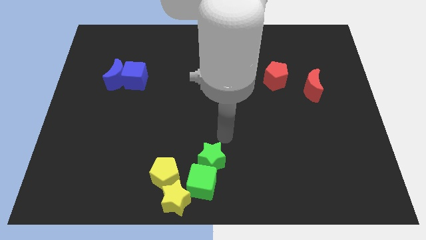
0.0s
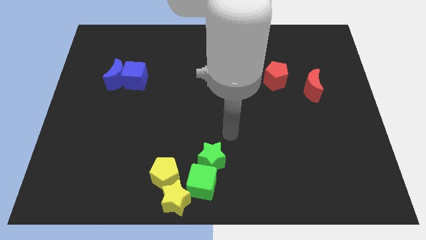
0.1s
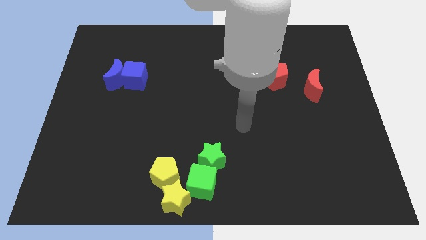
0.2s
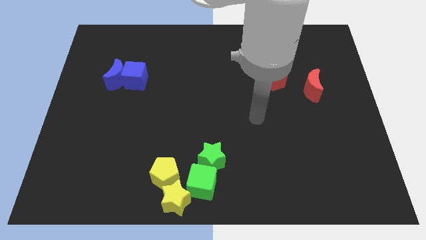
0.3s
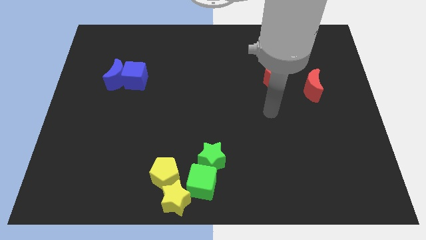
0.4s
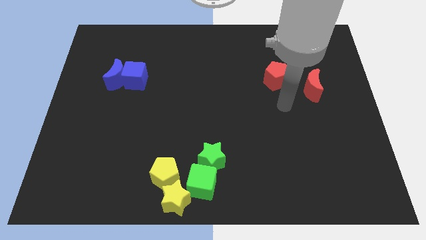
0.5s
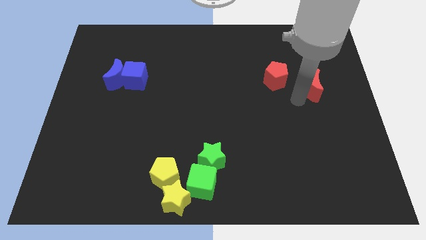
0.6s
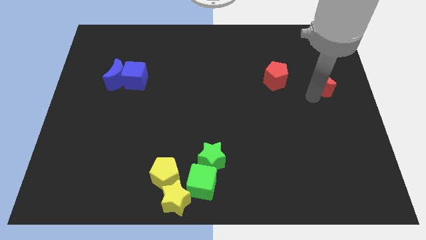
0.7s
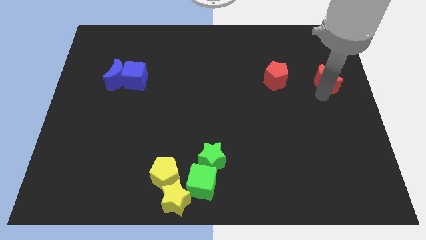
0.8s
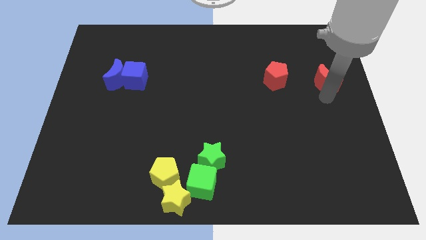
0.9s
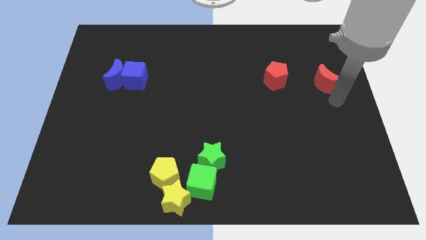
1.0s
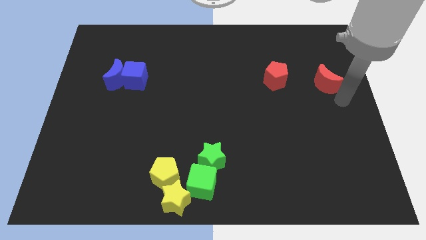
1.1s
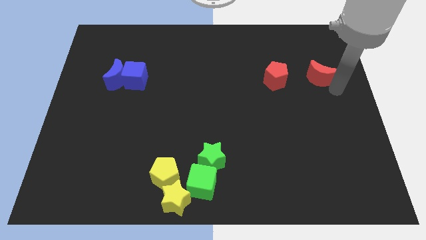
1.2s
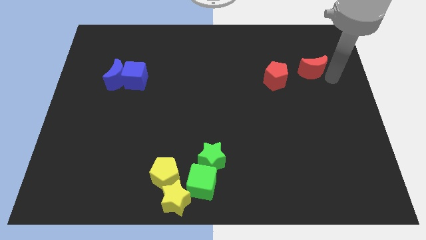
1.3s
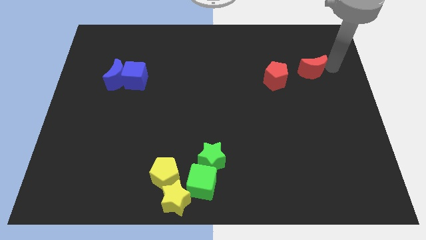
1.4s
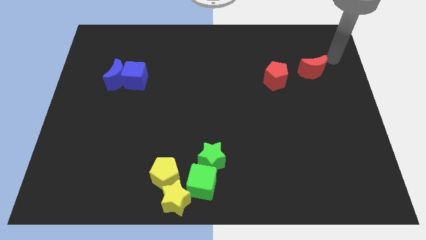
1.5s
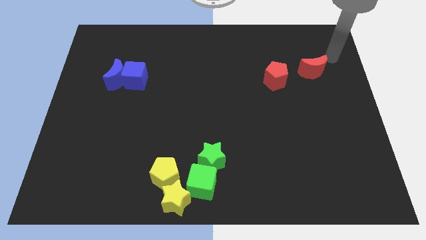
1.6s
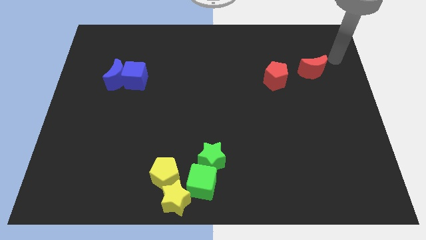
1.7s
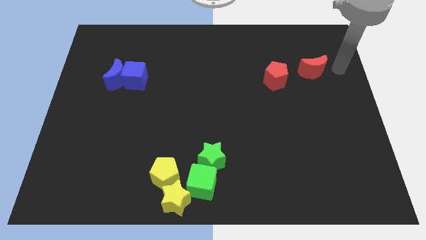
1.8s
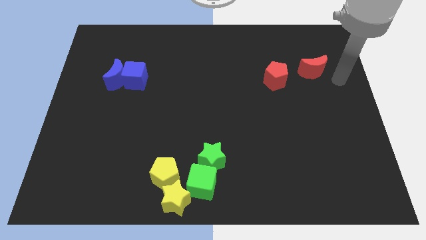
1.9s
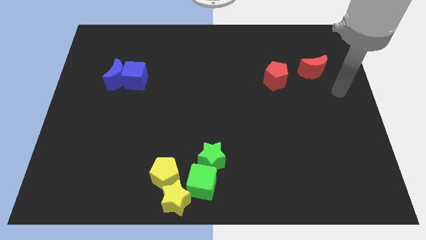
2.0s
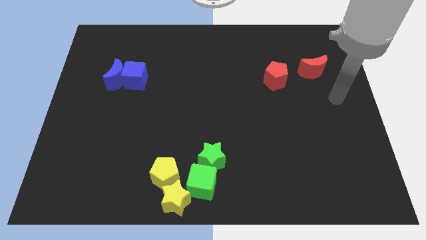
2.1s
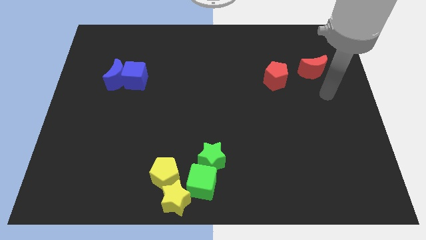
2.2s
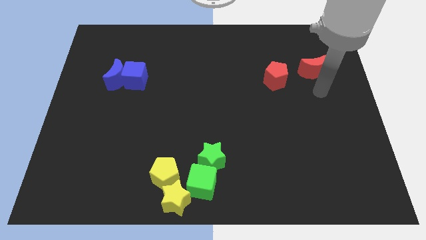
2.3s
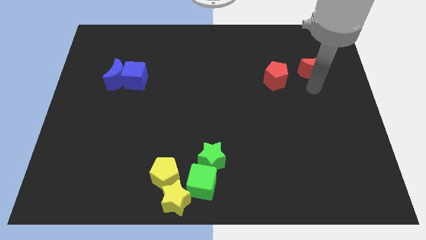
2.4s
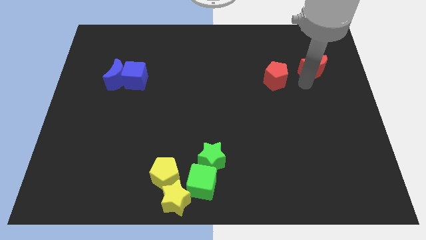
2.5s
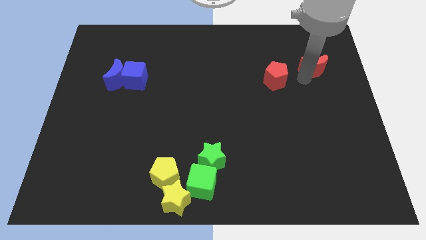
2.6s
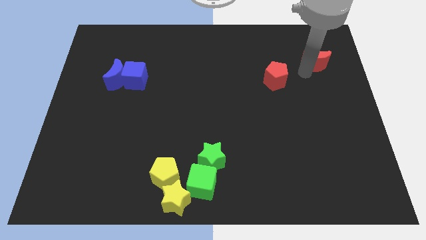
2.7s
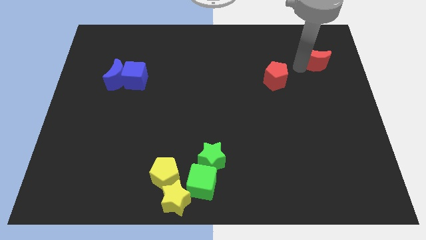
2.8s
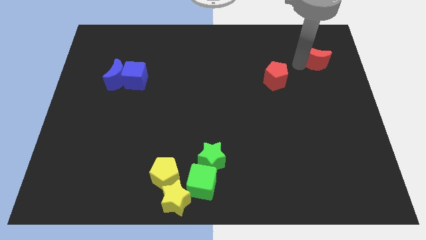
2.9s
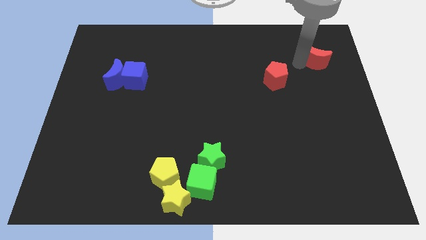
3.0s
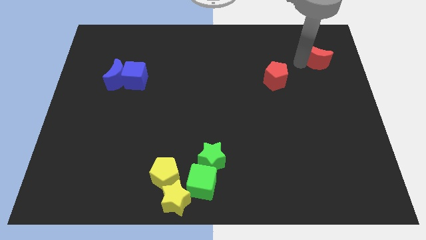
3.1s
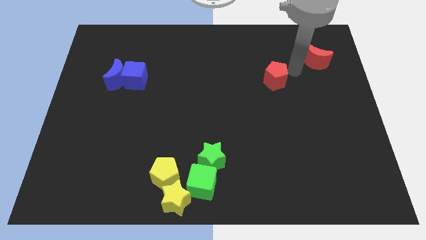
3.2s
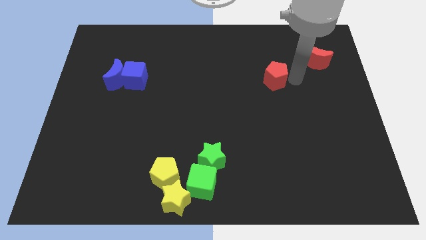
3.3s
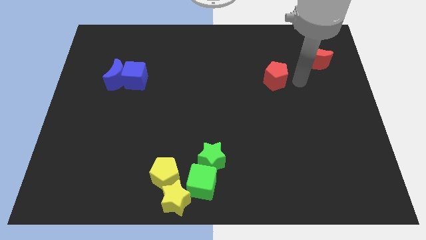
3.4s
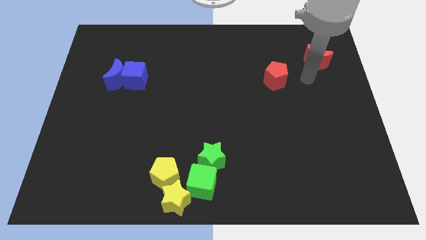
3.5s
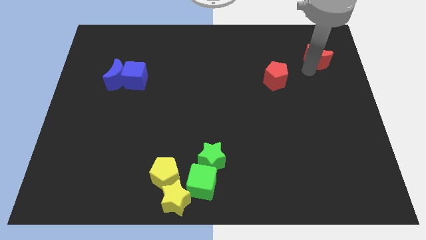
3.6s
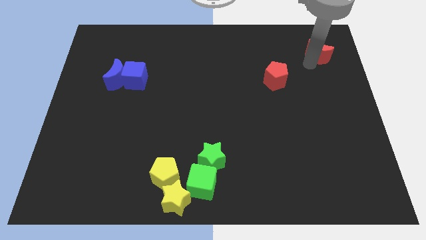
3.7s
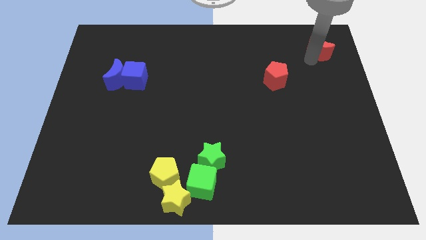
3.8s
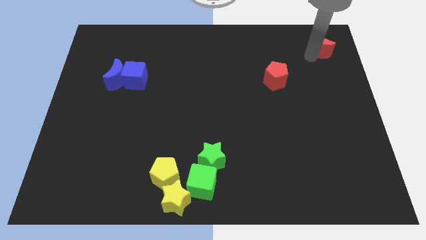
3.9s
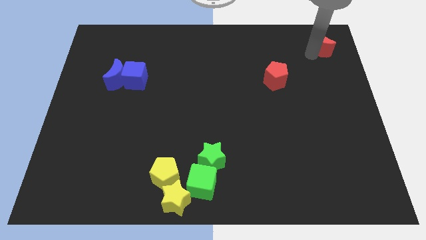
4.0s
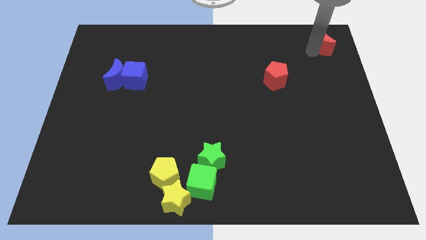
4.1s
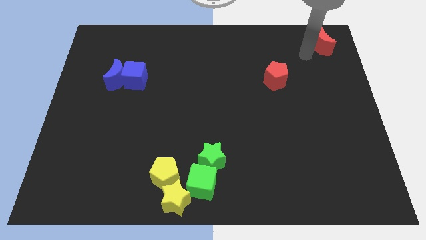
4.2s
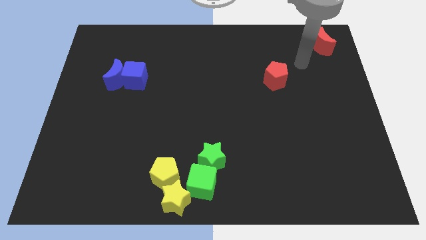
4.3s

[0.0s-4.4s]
separate red moon from red pentagon

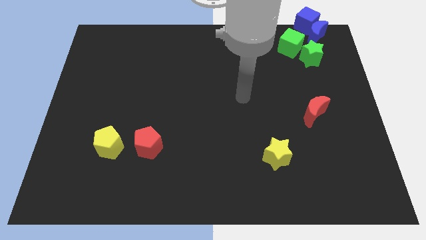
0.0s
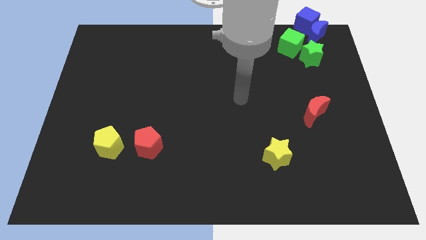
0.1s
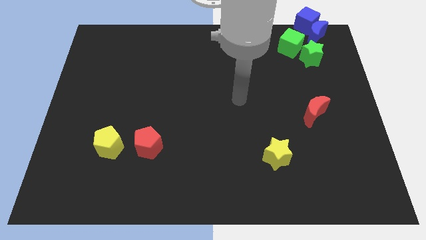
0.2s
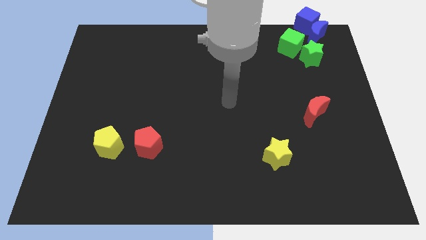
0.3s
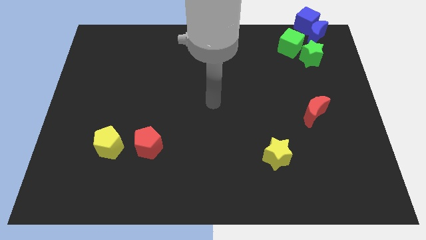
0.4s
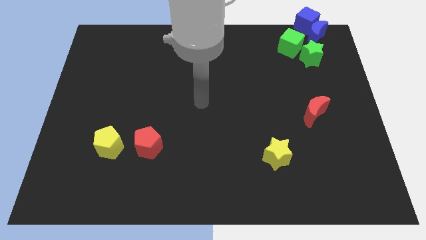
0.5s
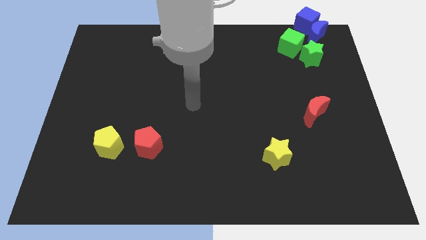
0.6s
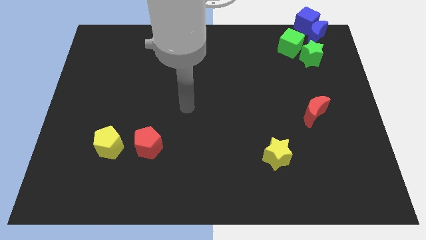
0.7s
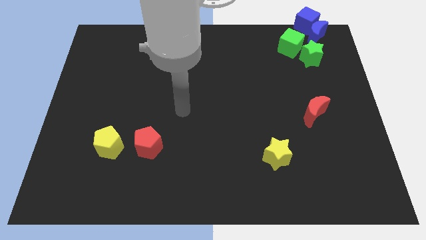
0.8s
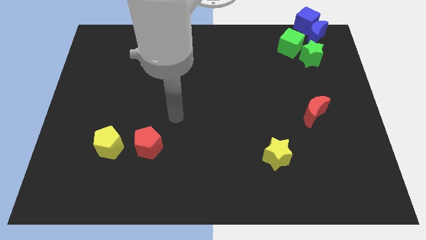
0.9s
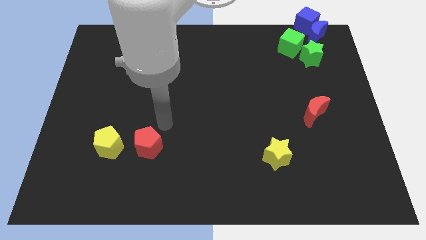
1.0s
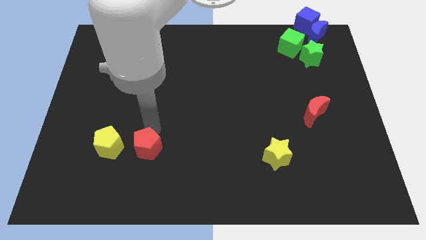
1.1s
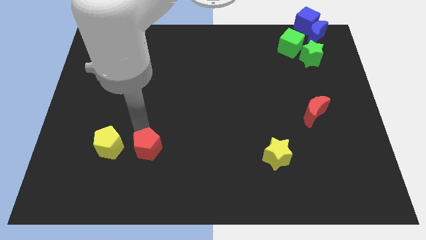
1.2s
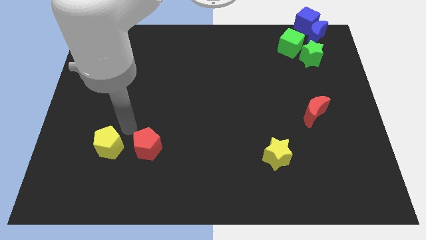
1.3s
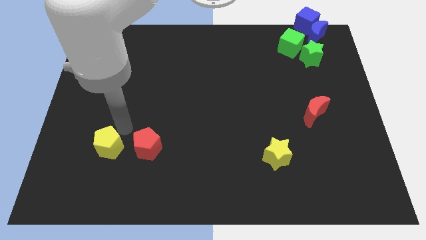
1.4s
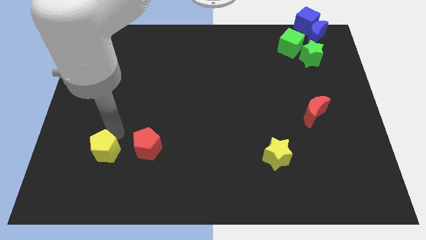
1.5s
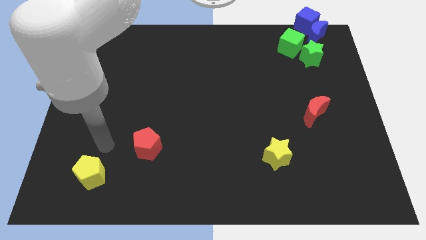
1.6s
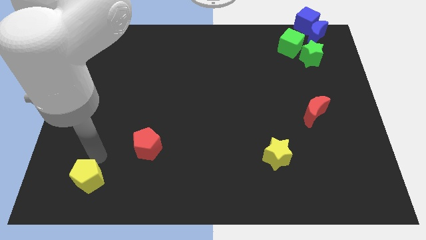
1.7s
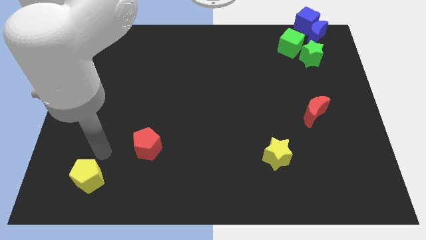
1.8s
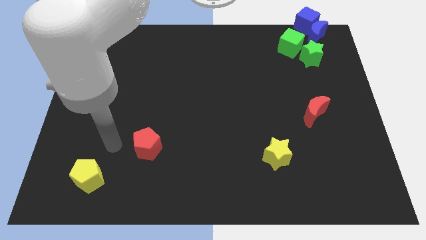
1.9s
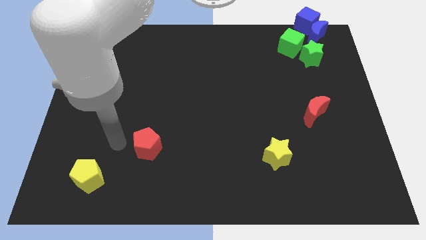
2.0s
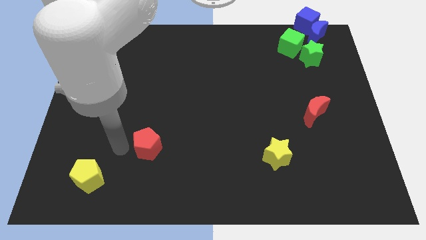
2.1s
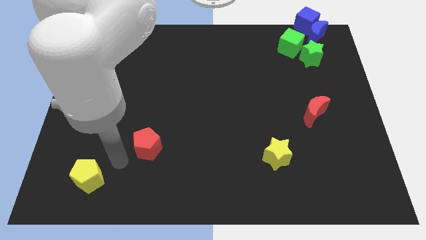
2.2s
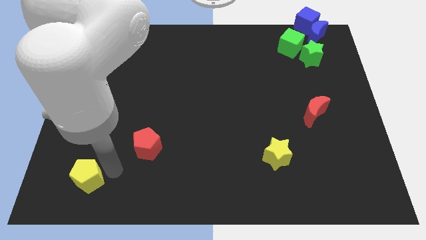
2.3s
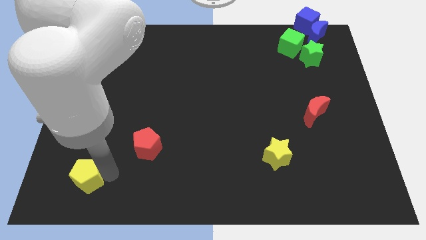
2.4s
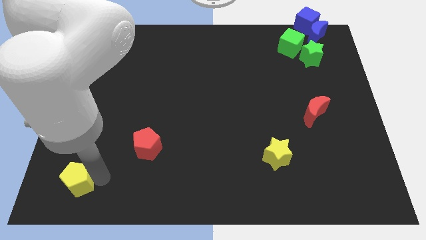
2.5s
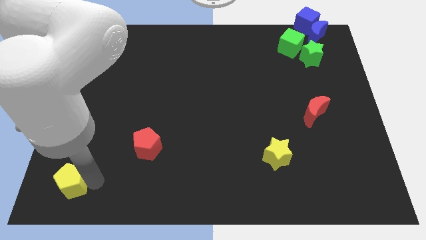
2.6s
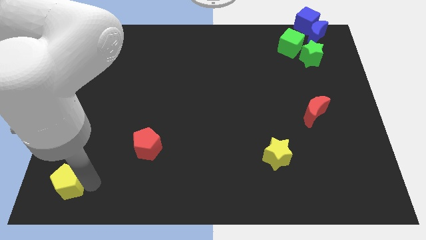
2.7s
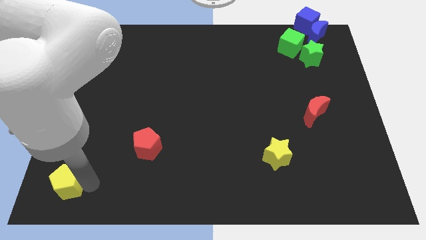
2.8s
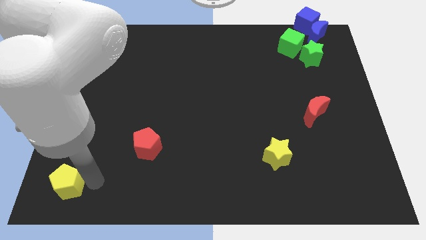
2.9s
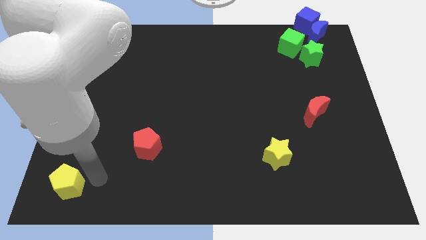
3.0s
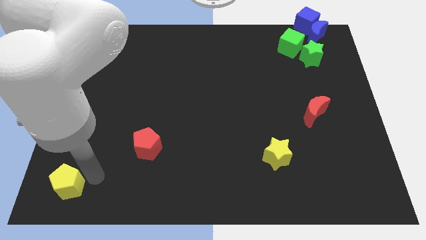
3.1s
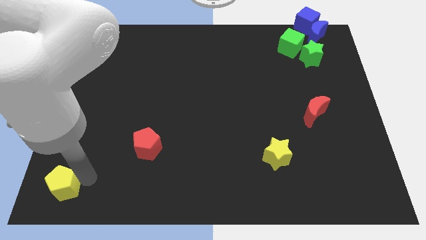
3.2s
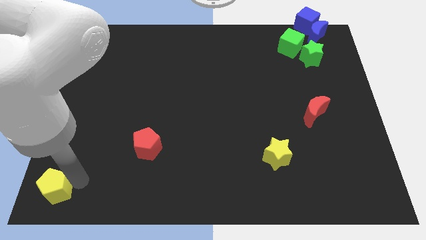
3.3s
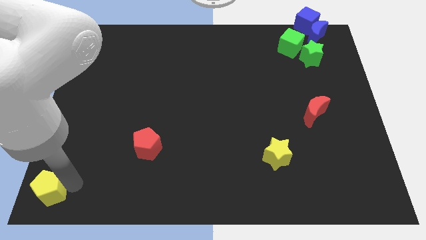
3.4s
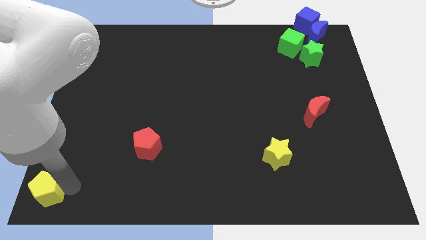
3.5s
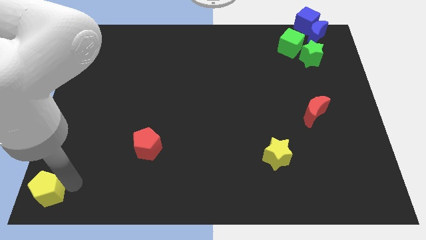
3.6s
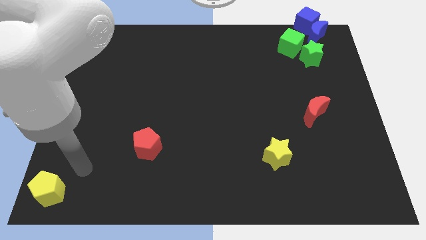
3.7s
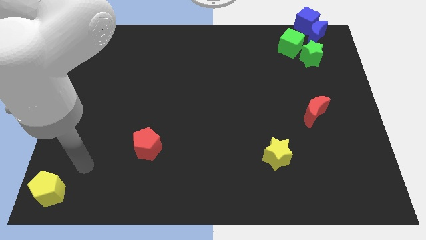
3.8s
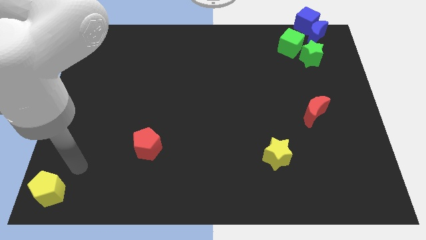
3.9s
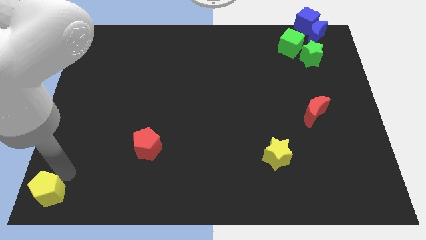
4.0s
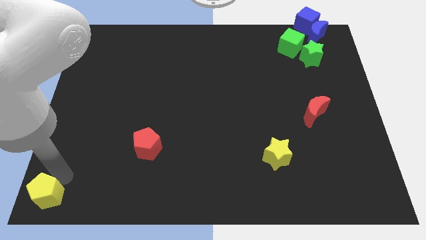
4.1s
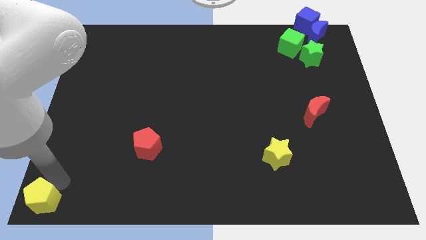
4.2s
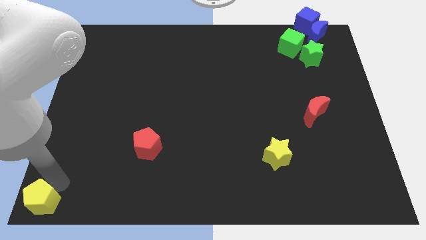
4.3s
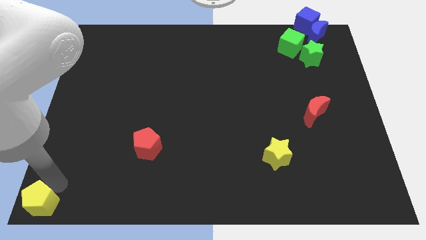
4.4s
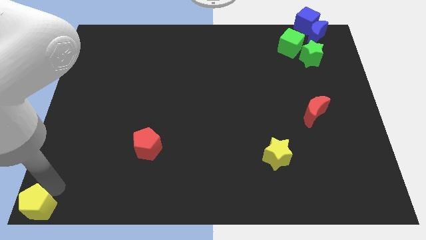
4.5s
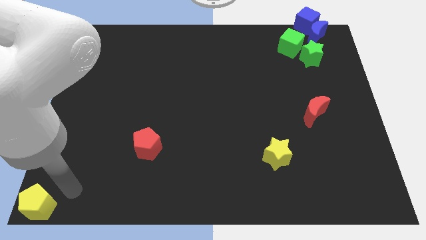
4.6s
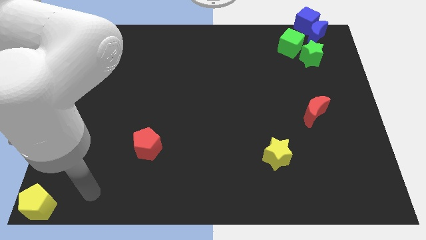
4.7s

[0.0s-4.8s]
slide the yellow pentagon to the bottom left
